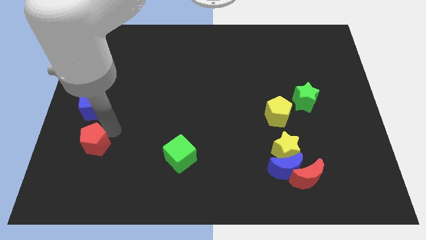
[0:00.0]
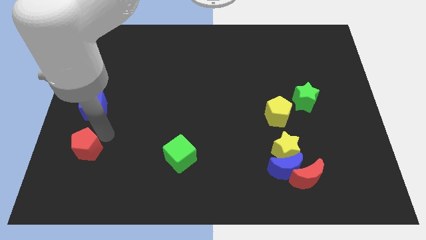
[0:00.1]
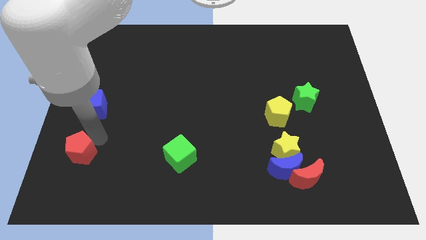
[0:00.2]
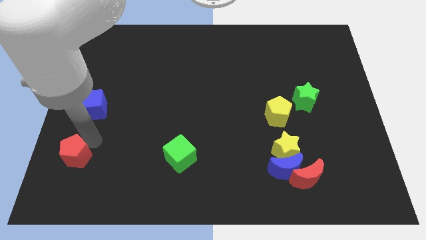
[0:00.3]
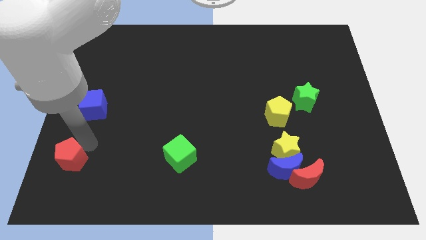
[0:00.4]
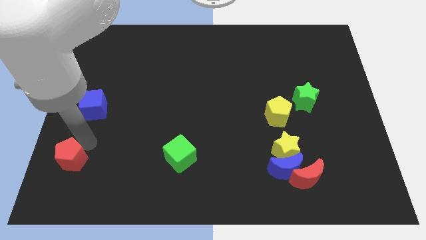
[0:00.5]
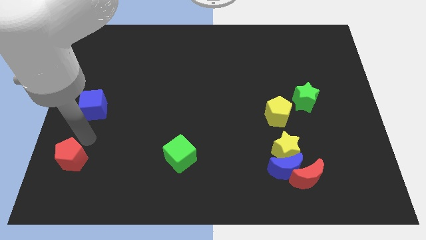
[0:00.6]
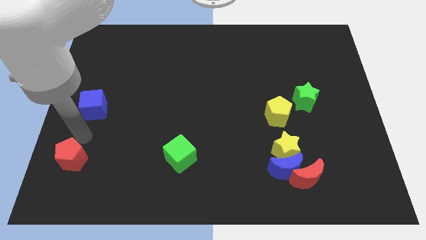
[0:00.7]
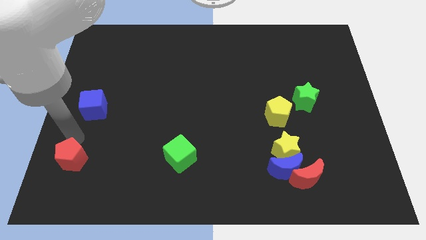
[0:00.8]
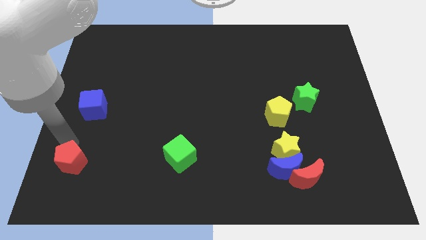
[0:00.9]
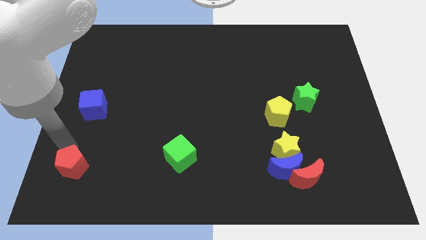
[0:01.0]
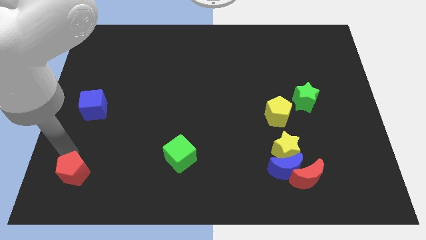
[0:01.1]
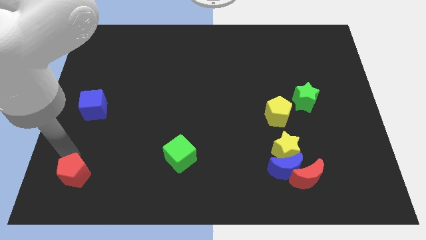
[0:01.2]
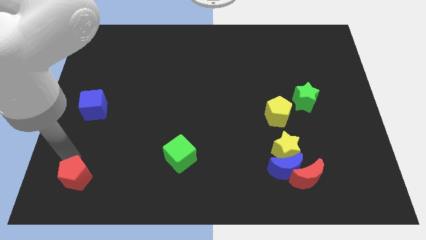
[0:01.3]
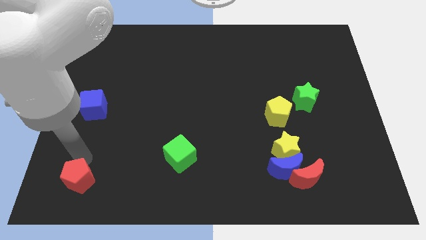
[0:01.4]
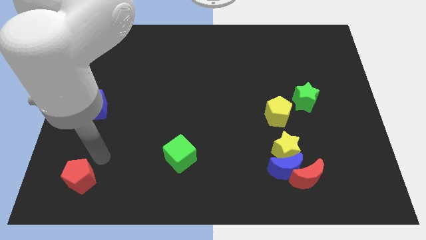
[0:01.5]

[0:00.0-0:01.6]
slide the red pentagon towards the bottom left side of the board

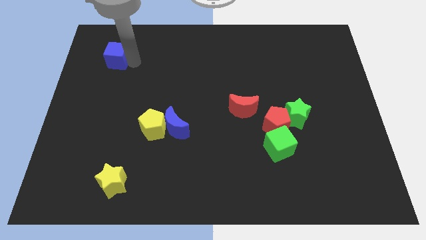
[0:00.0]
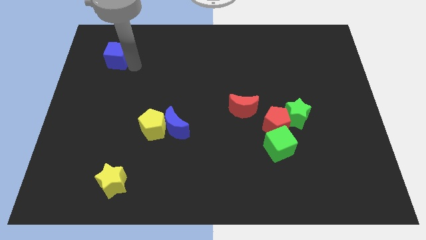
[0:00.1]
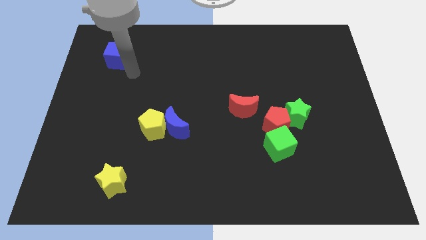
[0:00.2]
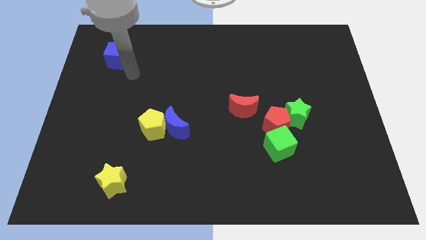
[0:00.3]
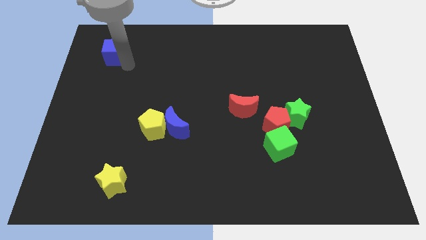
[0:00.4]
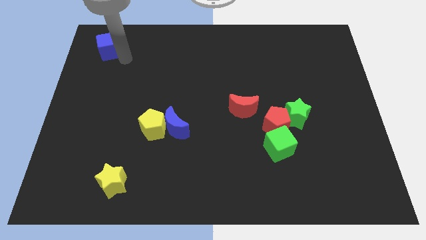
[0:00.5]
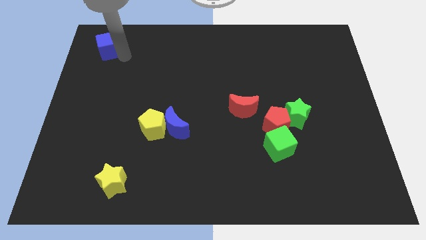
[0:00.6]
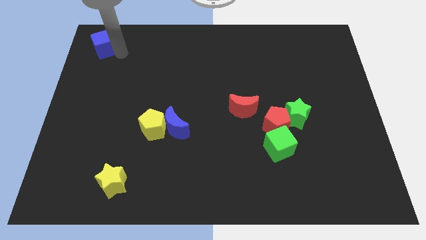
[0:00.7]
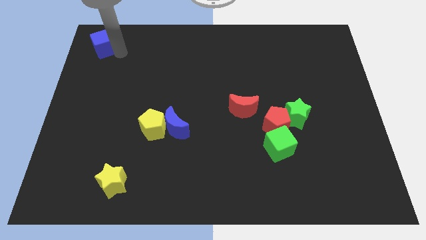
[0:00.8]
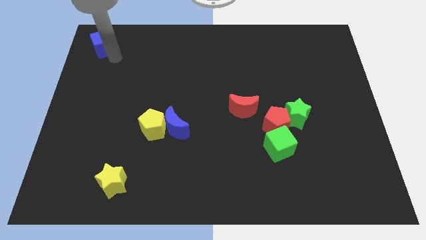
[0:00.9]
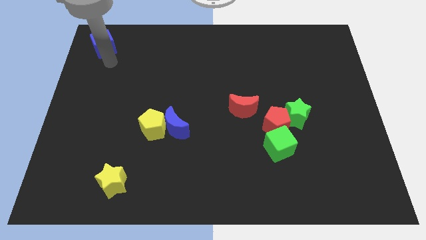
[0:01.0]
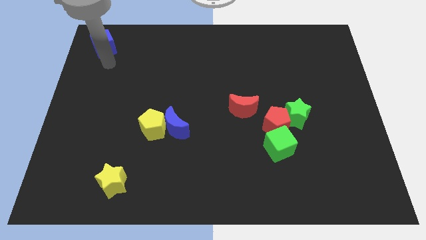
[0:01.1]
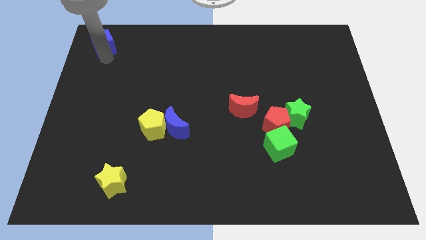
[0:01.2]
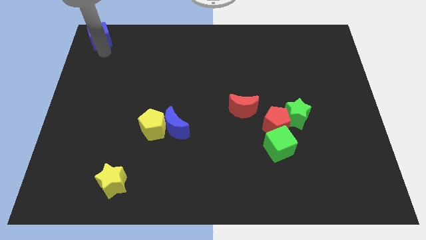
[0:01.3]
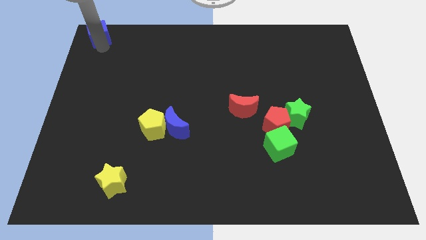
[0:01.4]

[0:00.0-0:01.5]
push blue cube to the top left corner of the board

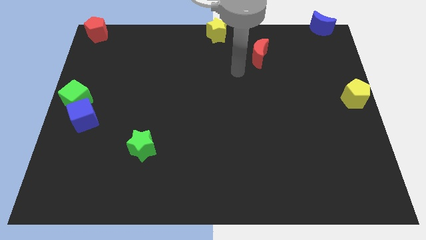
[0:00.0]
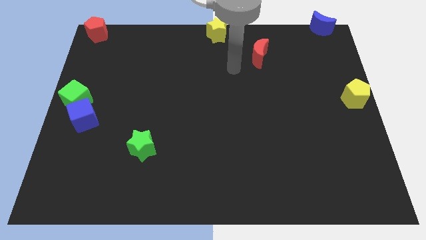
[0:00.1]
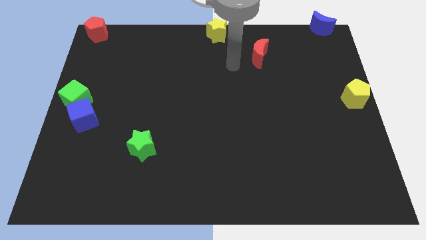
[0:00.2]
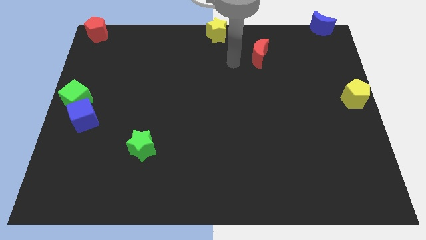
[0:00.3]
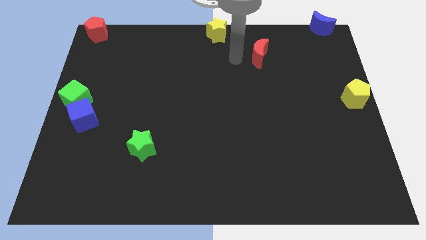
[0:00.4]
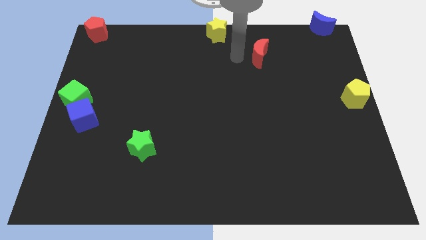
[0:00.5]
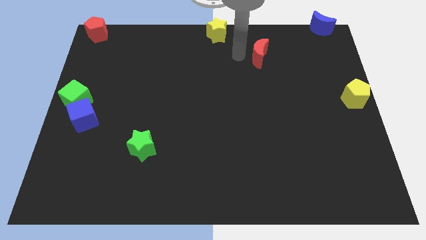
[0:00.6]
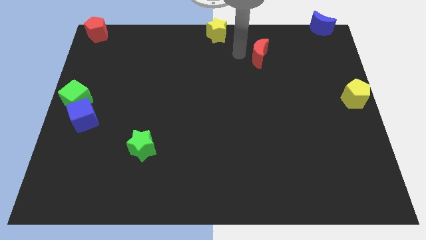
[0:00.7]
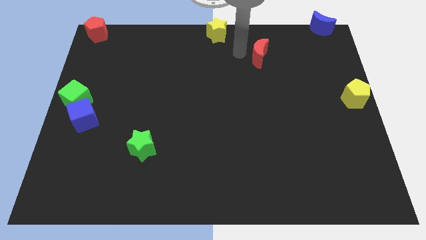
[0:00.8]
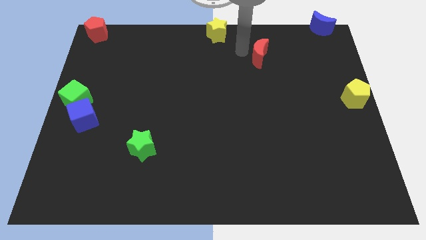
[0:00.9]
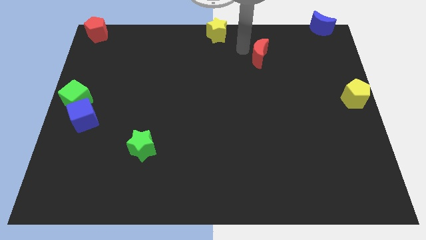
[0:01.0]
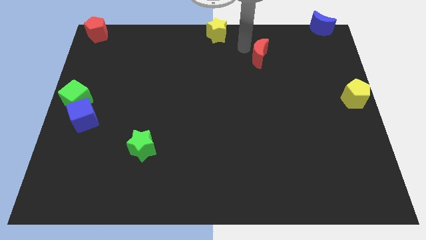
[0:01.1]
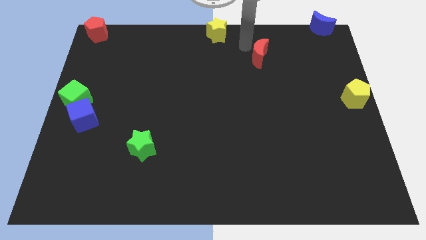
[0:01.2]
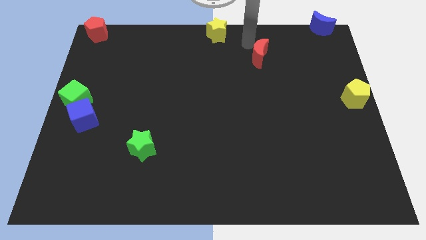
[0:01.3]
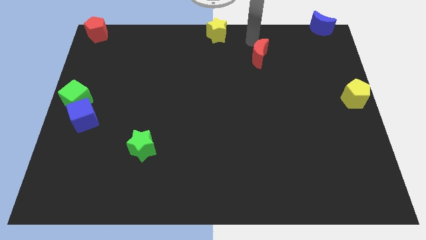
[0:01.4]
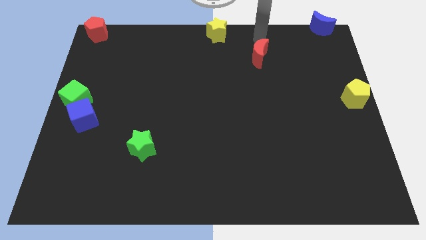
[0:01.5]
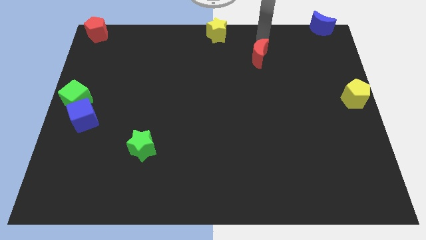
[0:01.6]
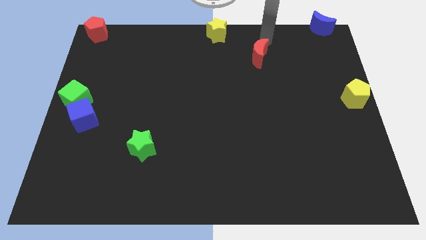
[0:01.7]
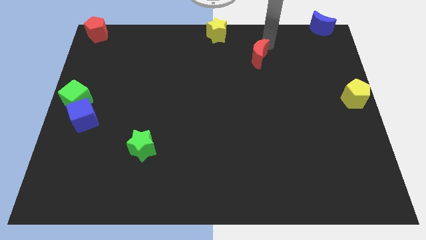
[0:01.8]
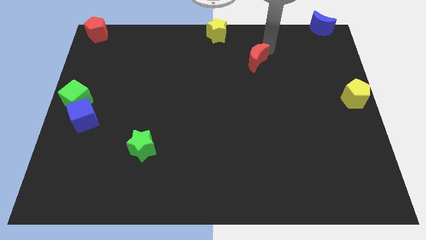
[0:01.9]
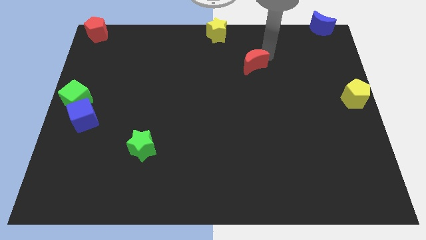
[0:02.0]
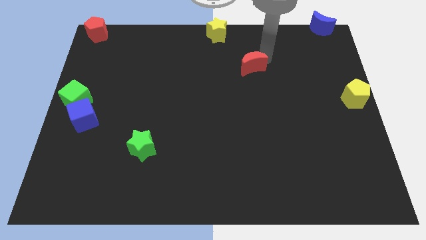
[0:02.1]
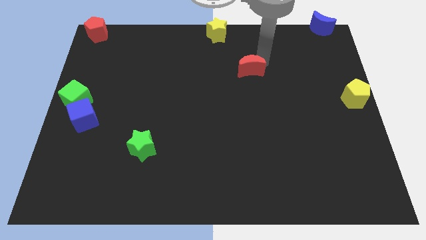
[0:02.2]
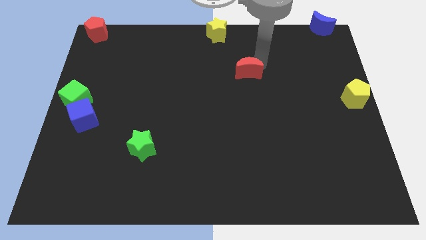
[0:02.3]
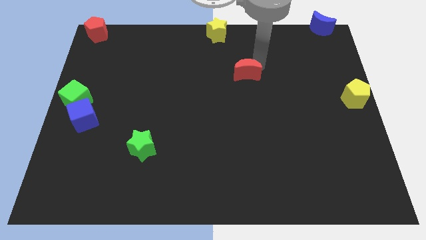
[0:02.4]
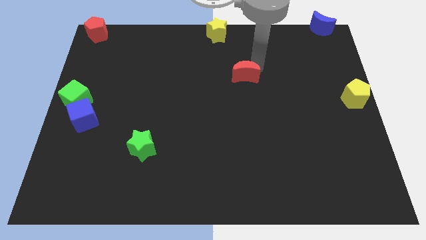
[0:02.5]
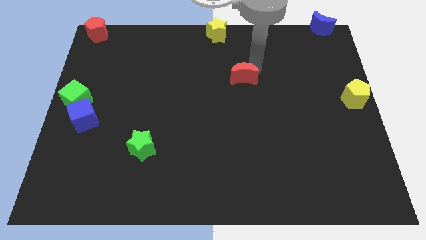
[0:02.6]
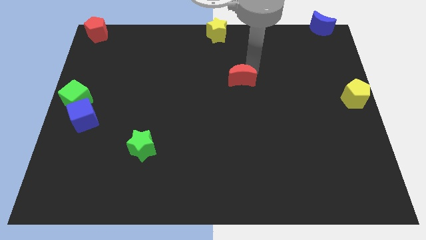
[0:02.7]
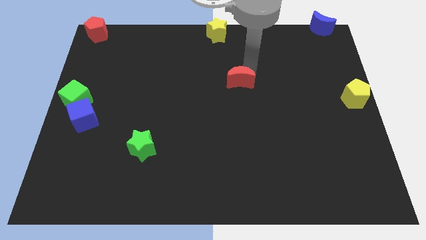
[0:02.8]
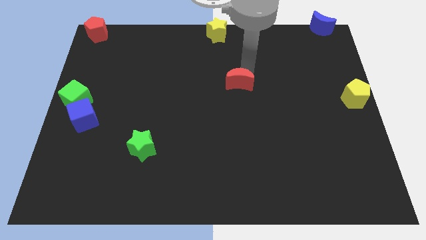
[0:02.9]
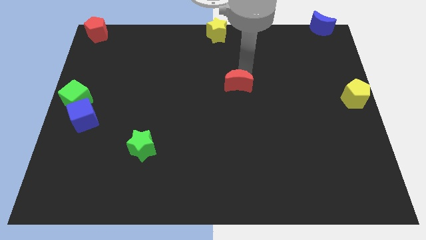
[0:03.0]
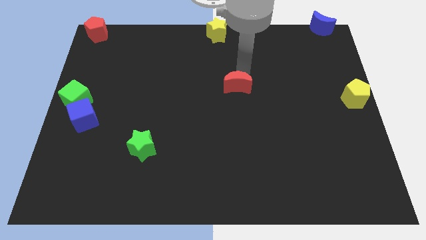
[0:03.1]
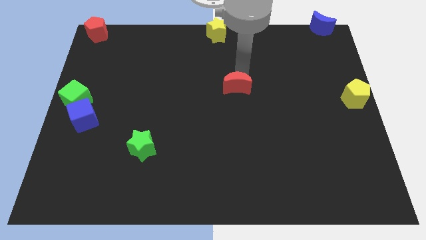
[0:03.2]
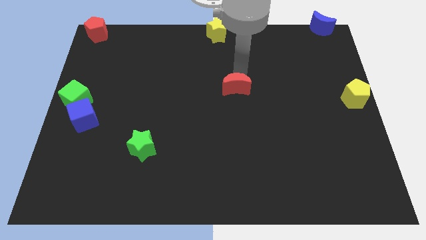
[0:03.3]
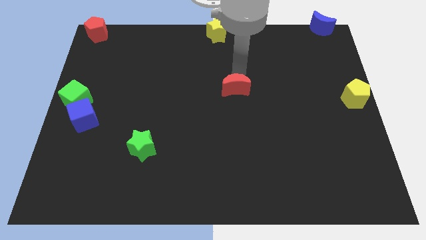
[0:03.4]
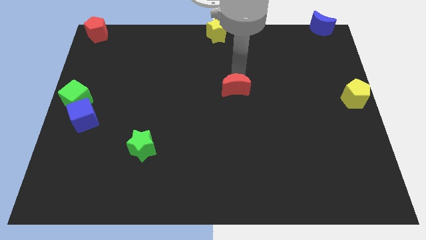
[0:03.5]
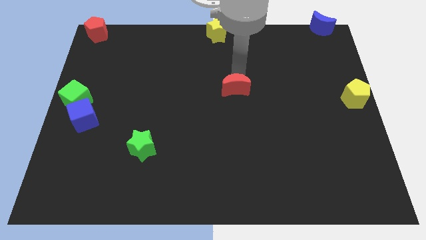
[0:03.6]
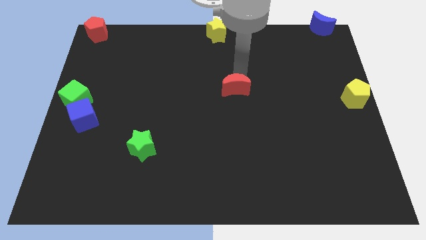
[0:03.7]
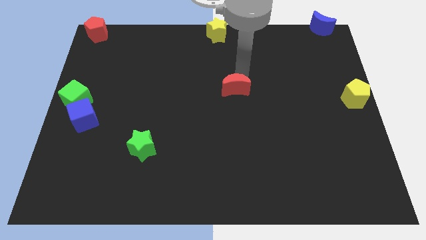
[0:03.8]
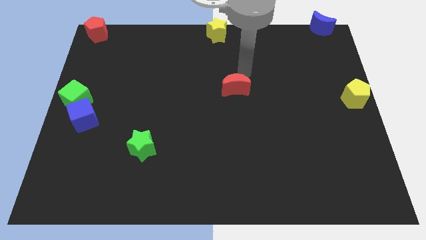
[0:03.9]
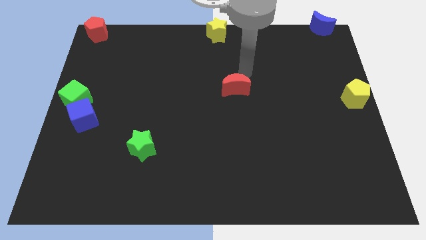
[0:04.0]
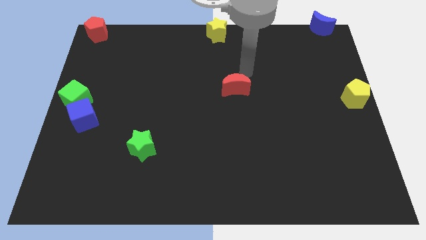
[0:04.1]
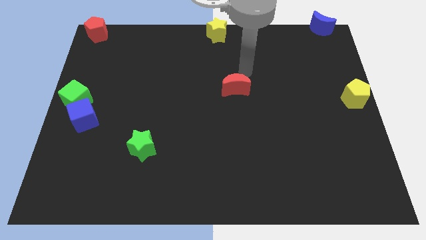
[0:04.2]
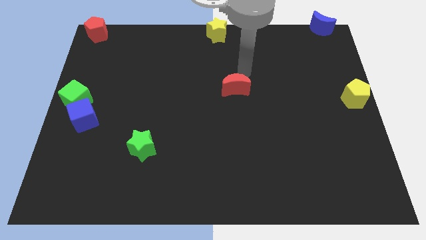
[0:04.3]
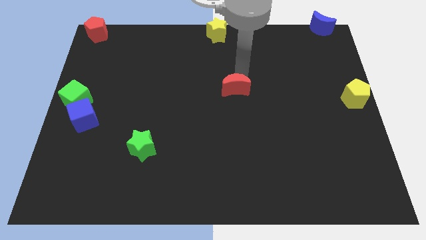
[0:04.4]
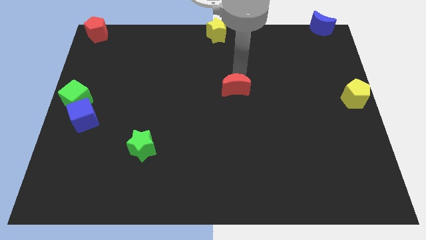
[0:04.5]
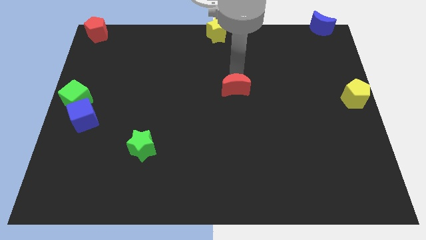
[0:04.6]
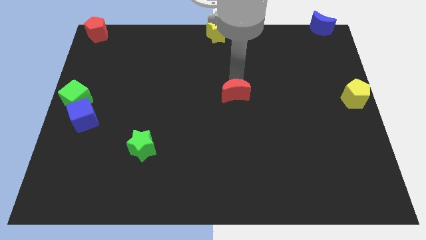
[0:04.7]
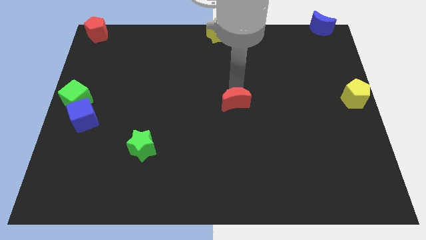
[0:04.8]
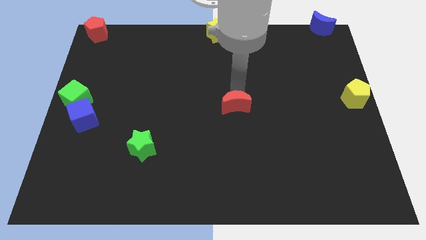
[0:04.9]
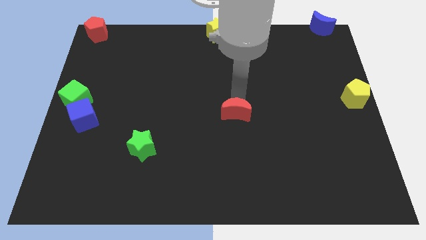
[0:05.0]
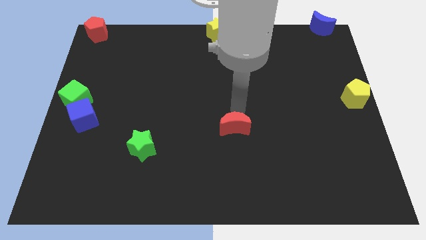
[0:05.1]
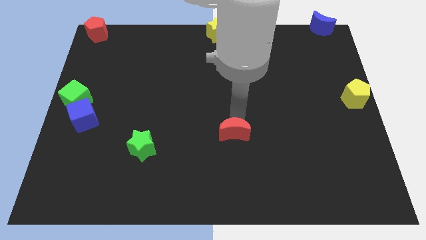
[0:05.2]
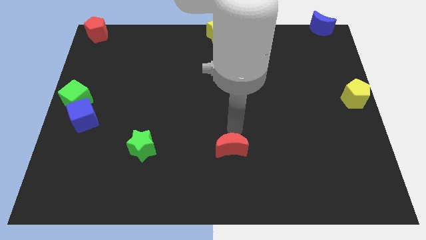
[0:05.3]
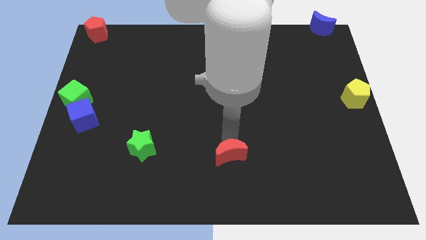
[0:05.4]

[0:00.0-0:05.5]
place the red crescent to the right side of the green star

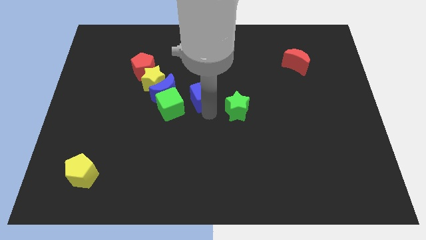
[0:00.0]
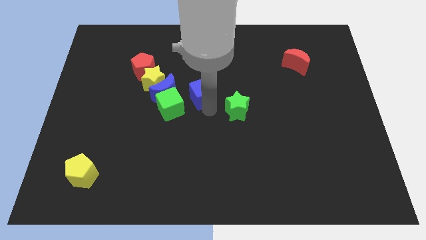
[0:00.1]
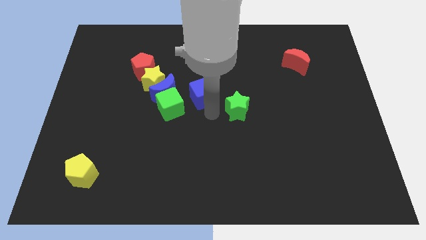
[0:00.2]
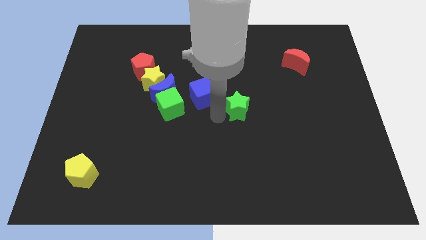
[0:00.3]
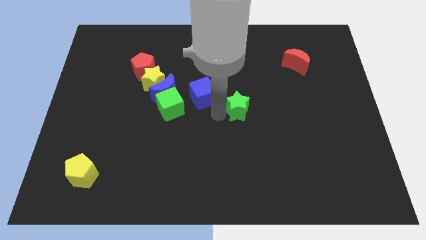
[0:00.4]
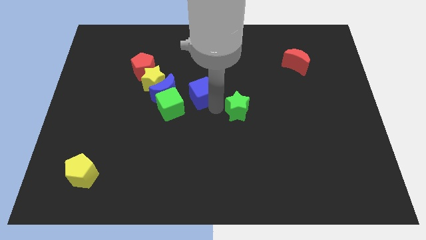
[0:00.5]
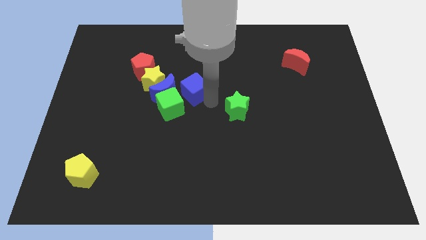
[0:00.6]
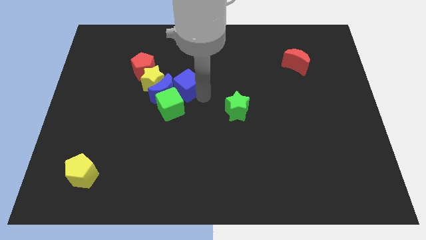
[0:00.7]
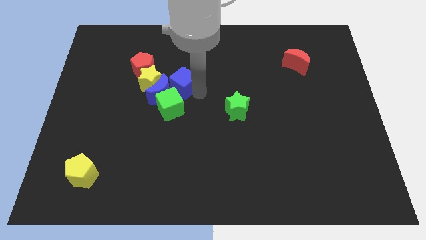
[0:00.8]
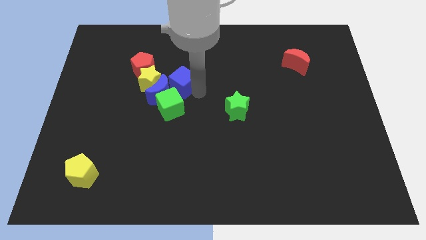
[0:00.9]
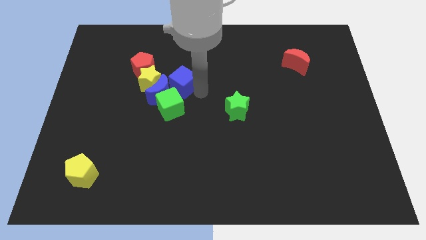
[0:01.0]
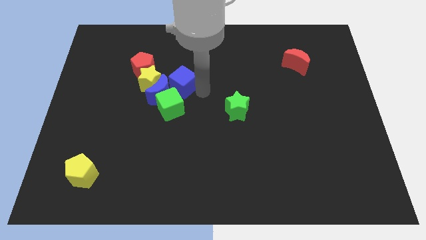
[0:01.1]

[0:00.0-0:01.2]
push the blue cube into the blue crescent
